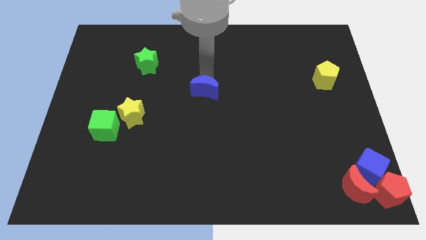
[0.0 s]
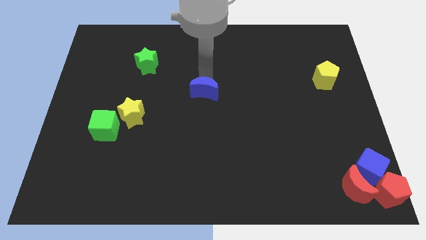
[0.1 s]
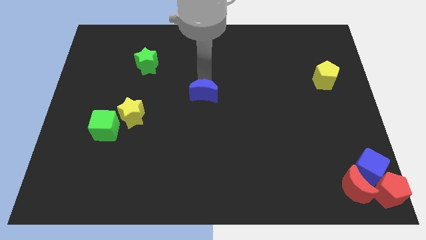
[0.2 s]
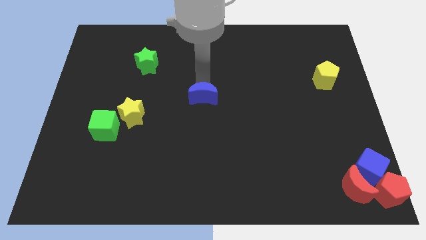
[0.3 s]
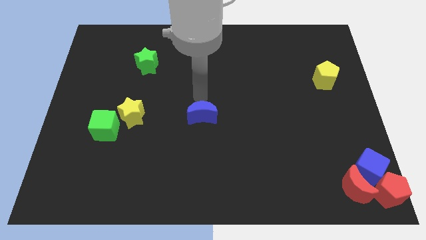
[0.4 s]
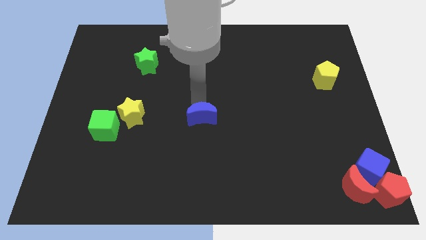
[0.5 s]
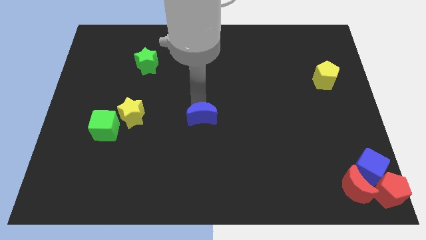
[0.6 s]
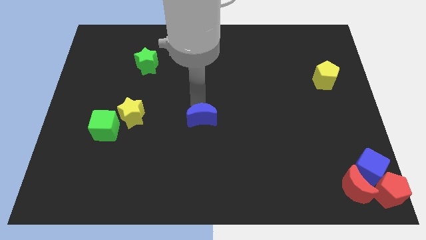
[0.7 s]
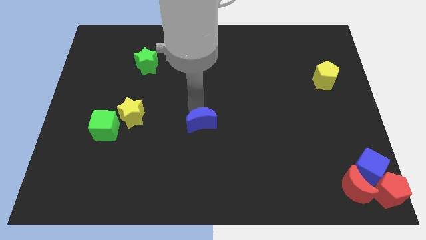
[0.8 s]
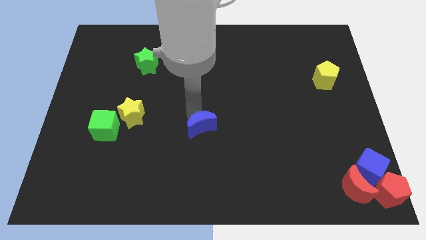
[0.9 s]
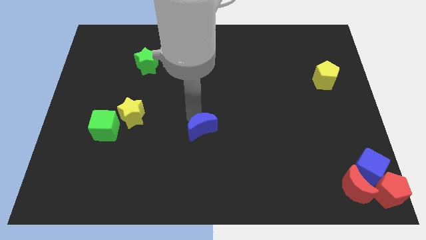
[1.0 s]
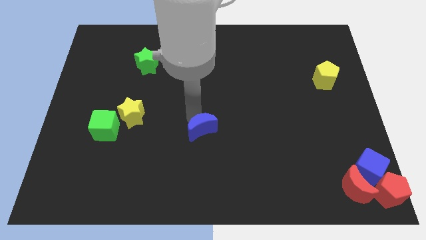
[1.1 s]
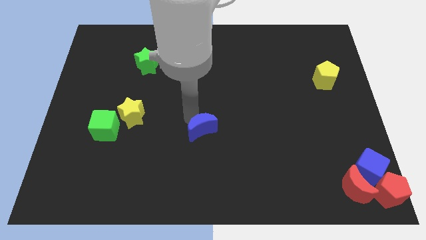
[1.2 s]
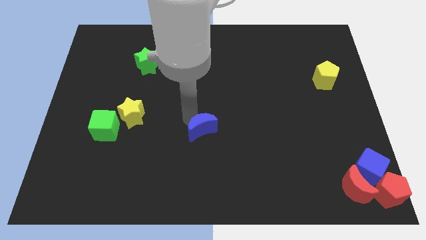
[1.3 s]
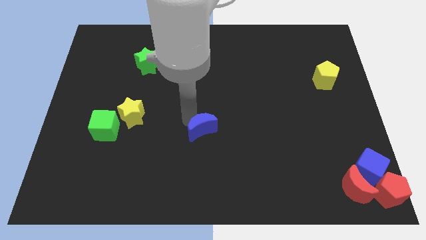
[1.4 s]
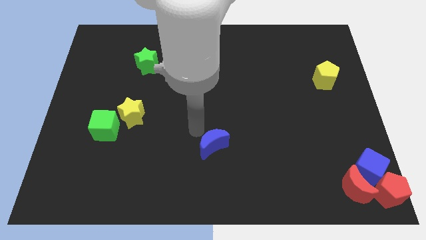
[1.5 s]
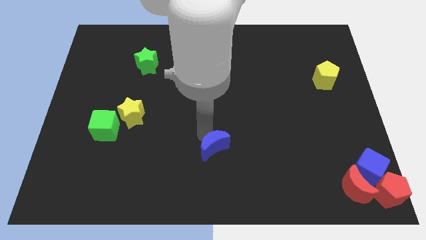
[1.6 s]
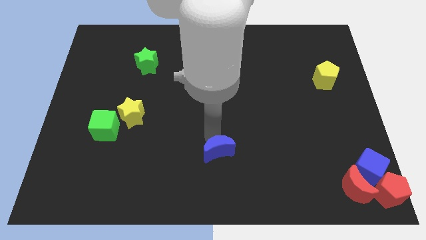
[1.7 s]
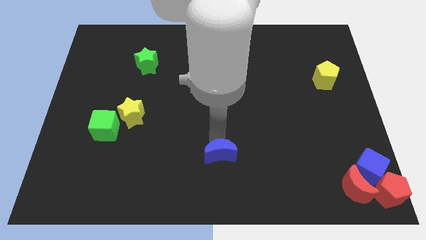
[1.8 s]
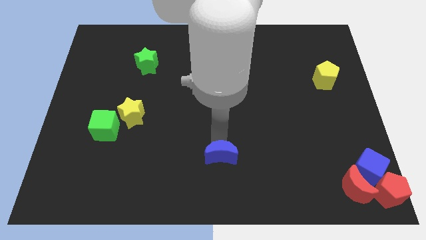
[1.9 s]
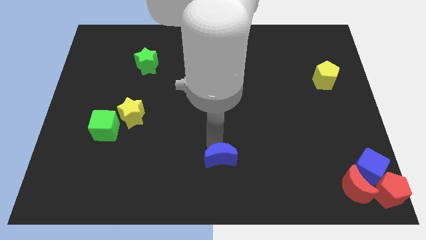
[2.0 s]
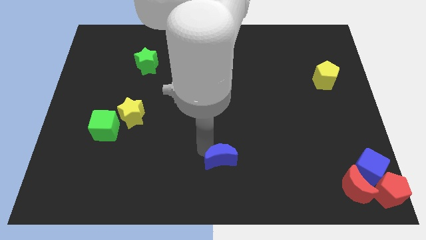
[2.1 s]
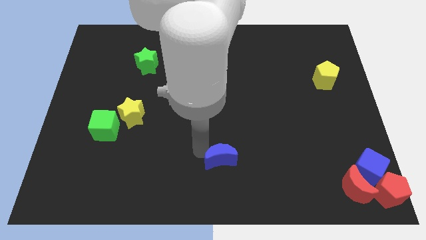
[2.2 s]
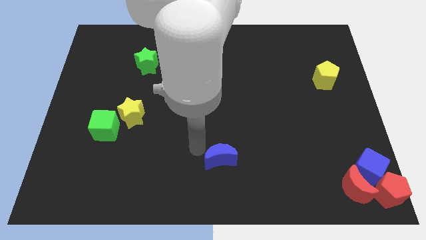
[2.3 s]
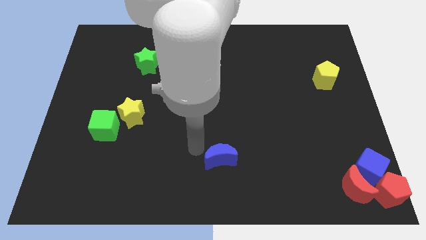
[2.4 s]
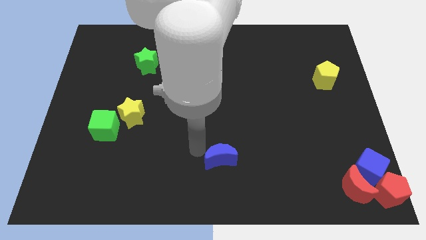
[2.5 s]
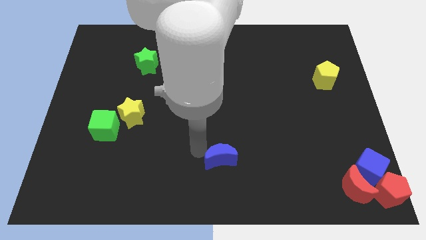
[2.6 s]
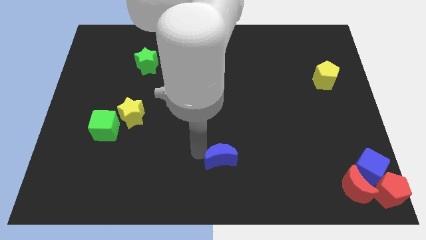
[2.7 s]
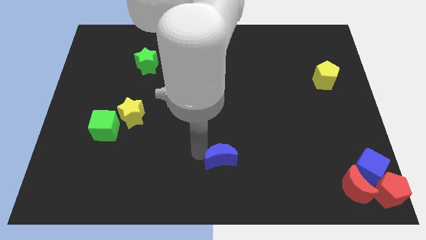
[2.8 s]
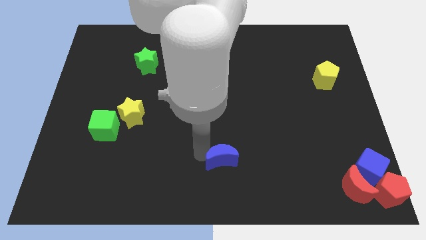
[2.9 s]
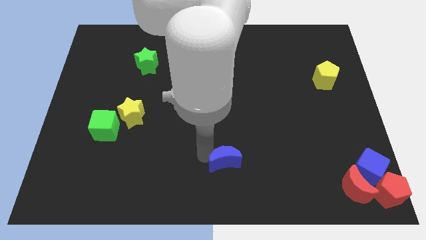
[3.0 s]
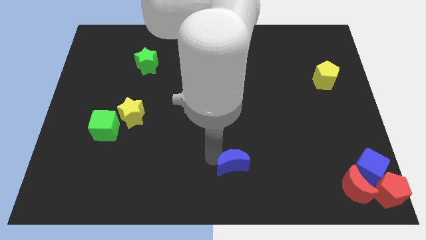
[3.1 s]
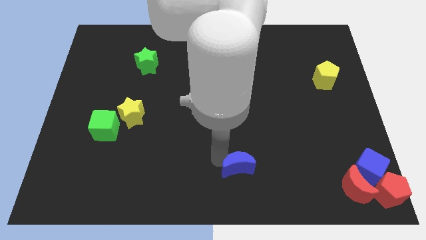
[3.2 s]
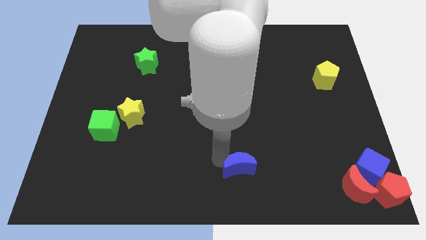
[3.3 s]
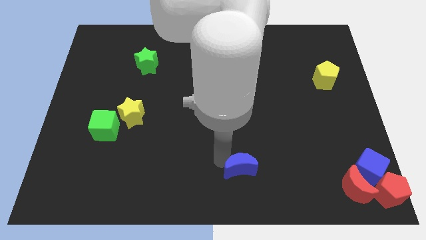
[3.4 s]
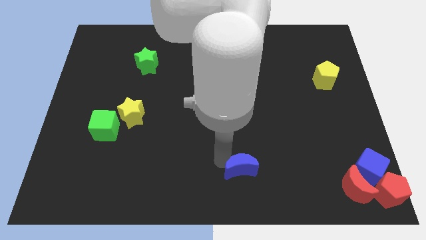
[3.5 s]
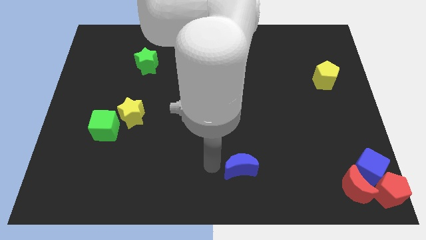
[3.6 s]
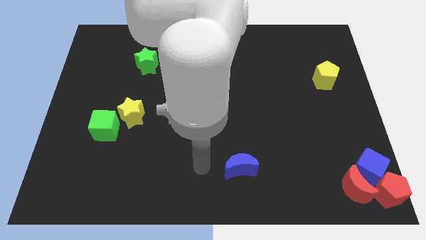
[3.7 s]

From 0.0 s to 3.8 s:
place the blue moon to the left of the group of red blocks and blue cube

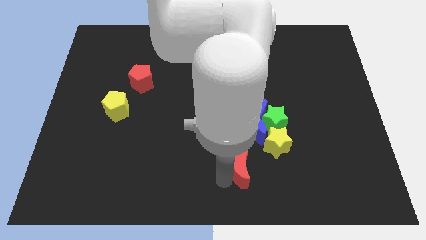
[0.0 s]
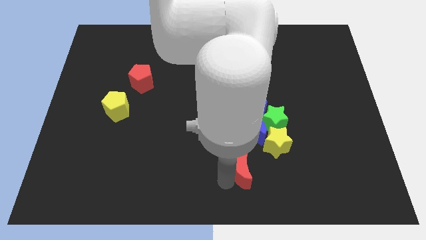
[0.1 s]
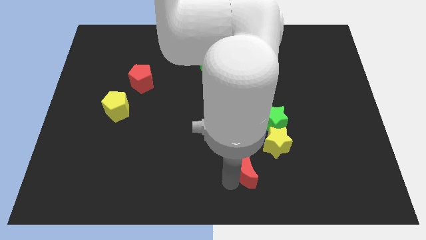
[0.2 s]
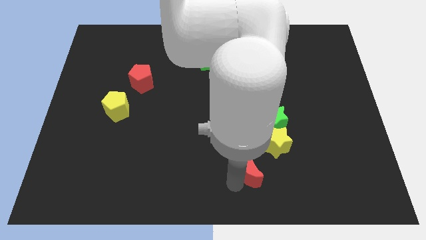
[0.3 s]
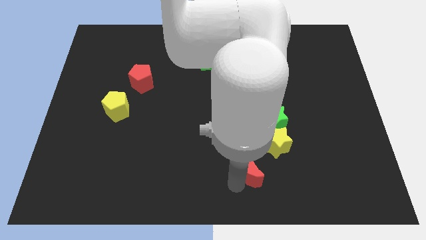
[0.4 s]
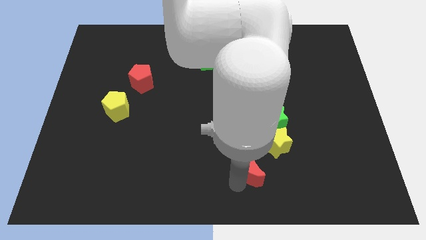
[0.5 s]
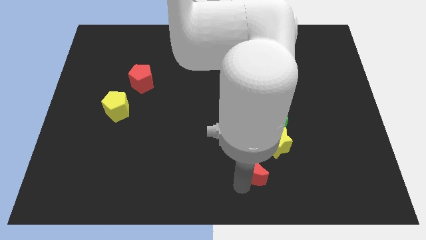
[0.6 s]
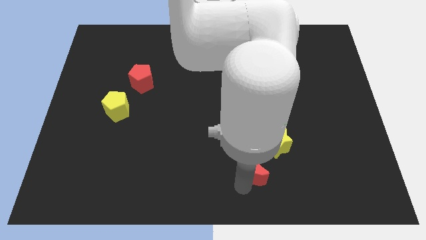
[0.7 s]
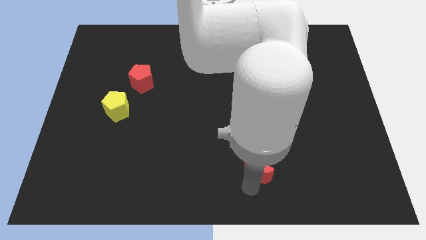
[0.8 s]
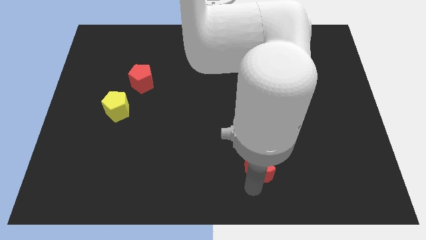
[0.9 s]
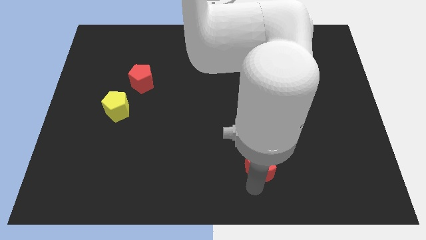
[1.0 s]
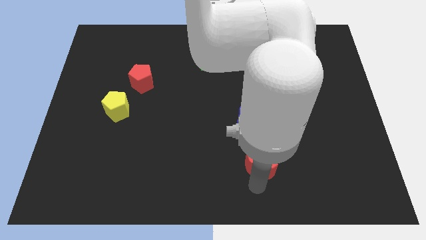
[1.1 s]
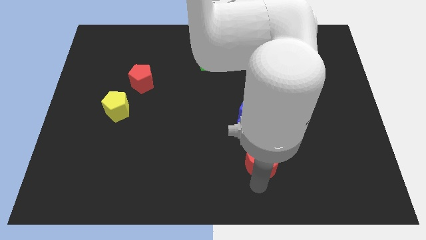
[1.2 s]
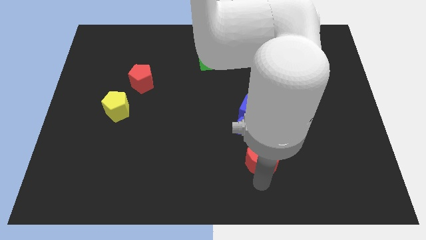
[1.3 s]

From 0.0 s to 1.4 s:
place the red crescent below the yellow star

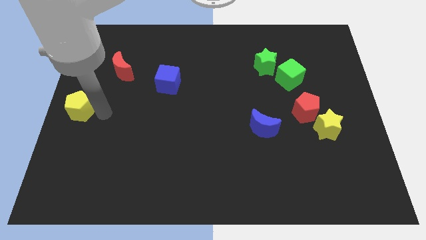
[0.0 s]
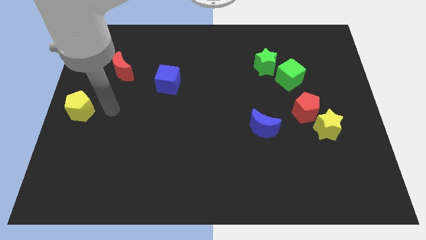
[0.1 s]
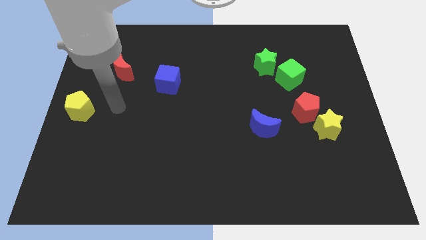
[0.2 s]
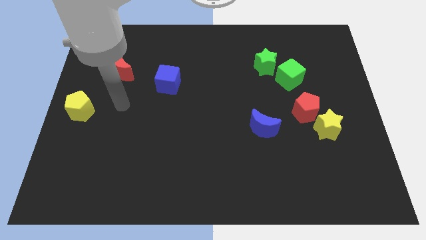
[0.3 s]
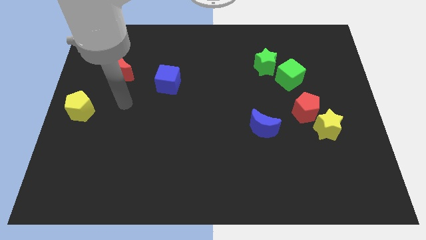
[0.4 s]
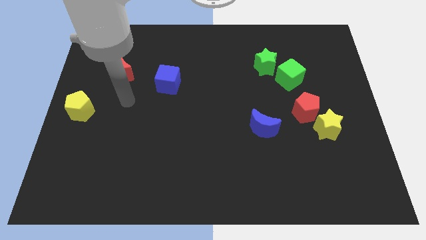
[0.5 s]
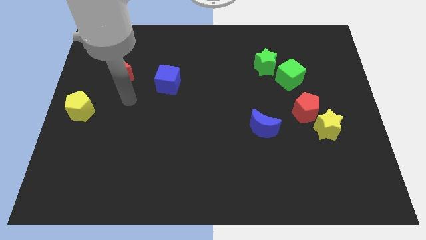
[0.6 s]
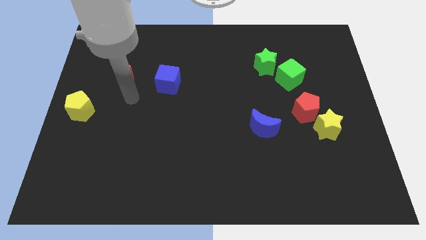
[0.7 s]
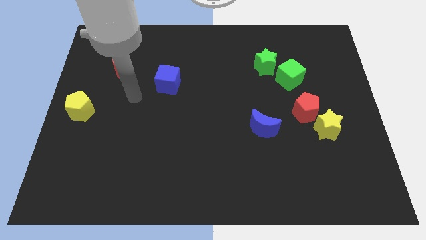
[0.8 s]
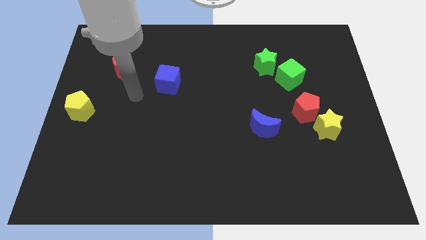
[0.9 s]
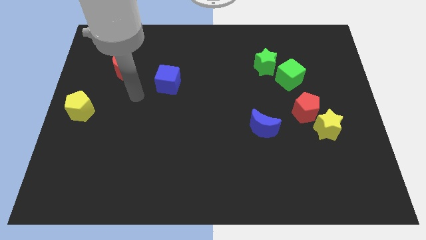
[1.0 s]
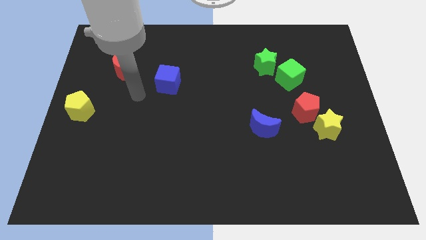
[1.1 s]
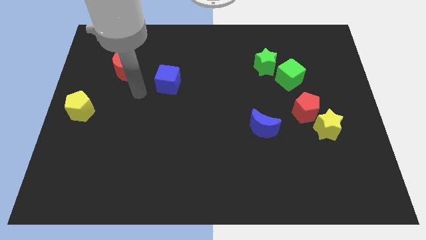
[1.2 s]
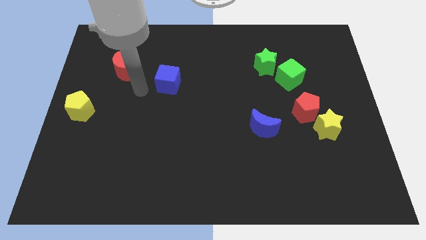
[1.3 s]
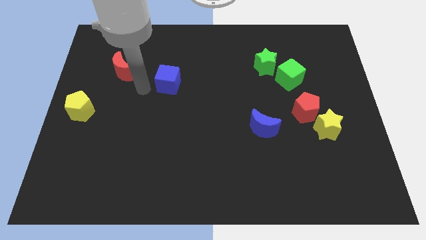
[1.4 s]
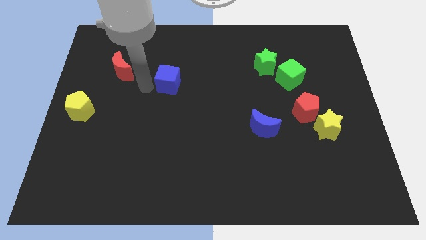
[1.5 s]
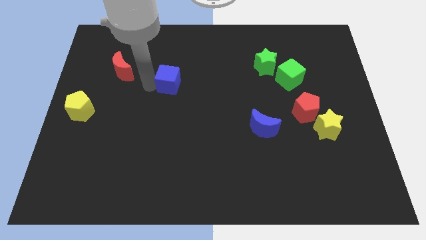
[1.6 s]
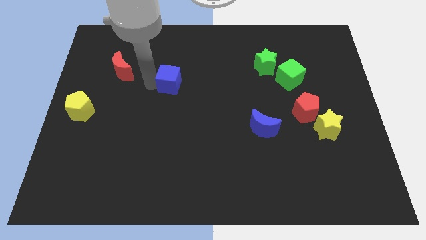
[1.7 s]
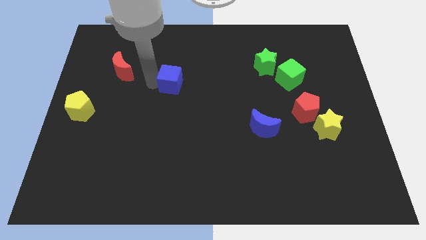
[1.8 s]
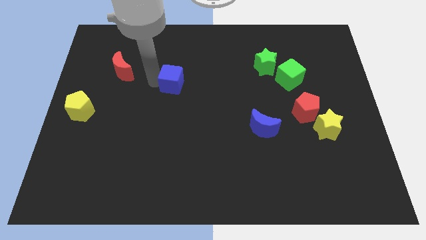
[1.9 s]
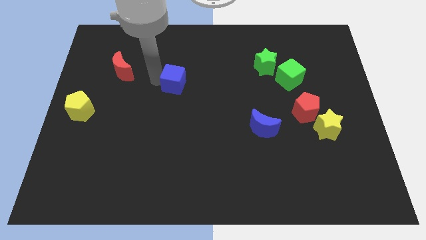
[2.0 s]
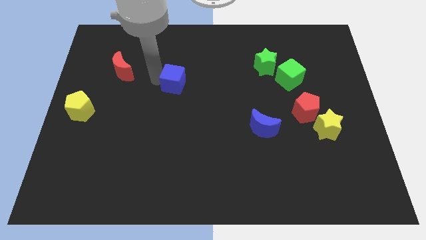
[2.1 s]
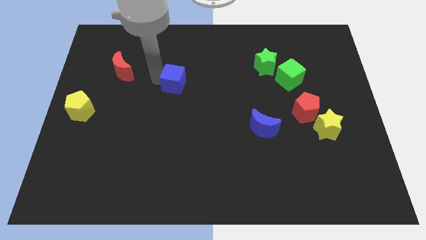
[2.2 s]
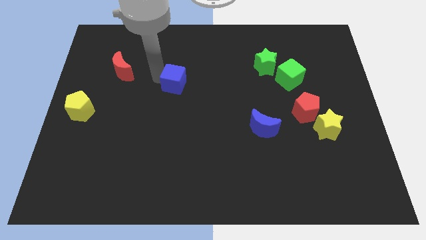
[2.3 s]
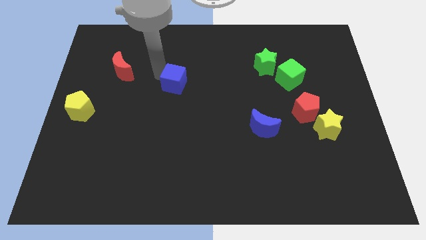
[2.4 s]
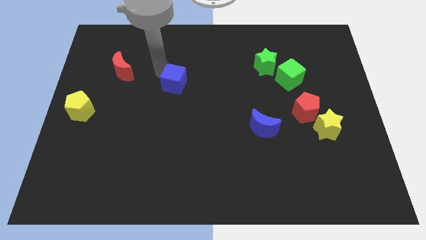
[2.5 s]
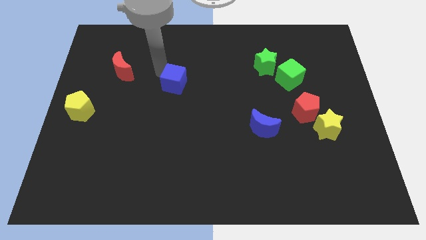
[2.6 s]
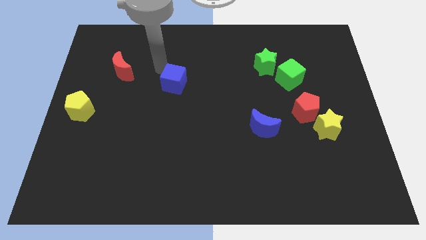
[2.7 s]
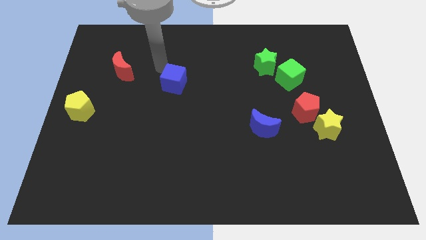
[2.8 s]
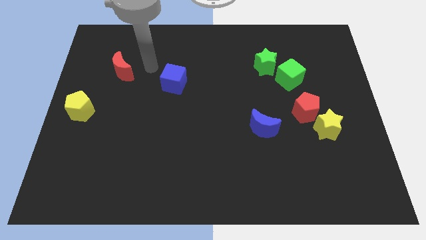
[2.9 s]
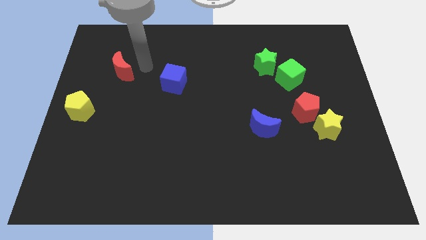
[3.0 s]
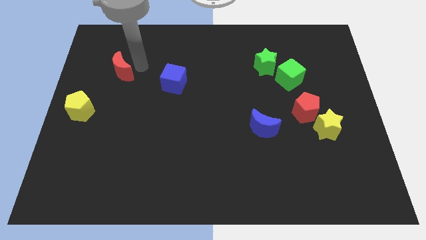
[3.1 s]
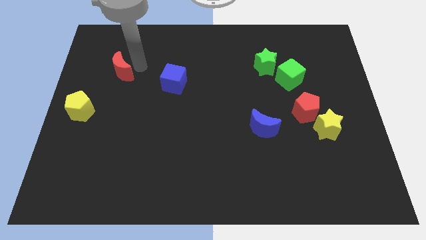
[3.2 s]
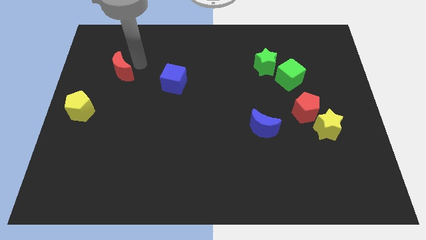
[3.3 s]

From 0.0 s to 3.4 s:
slightly touch the blue cube

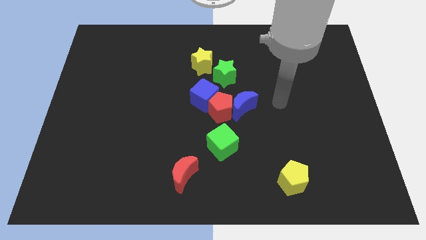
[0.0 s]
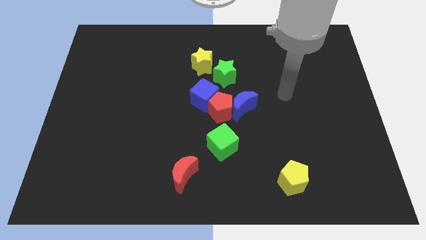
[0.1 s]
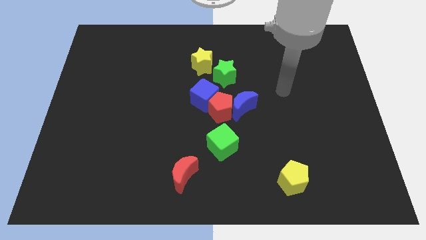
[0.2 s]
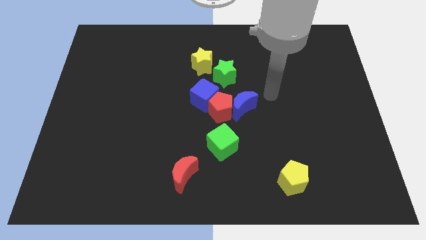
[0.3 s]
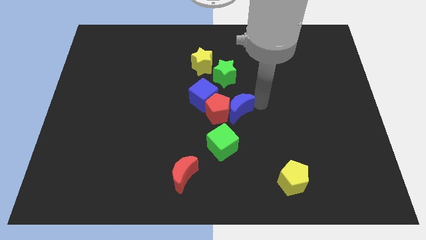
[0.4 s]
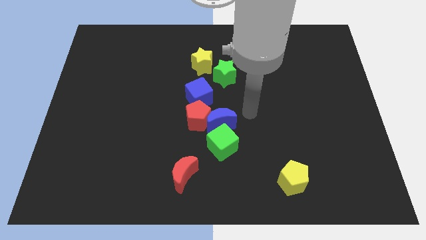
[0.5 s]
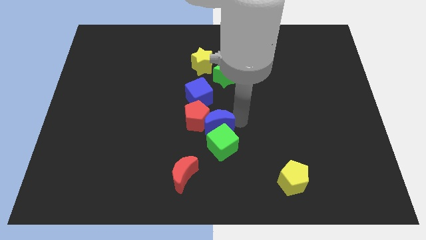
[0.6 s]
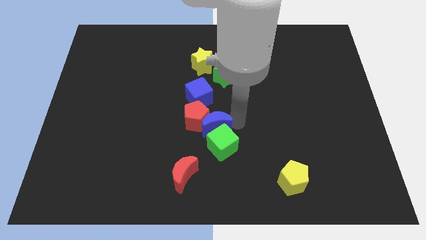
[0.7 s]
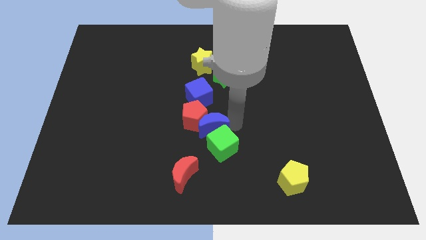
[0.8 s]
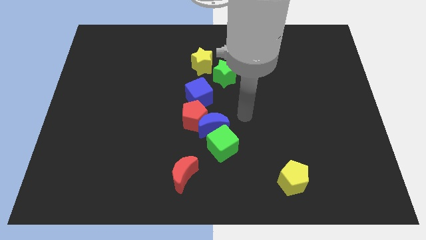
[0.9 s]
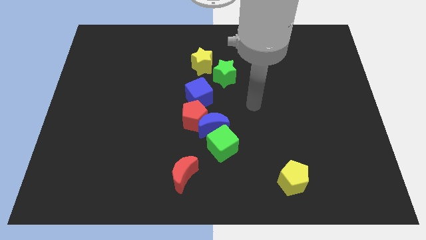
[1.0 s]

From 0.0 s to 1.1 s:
move blue moon into red pentagon and green cube
